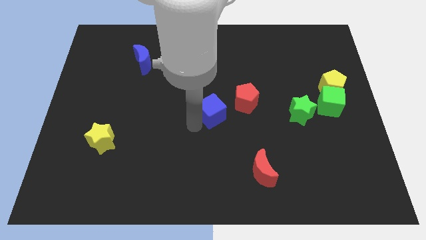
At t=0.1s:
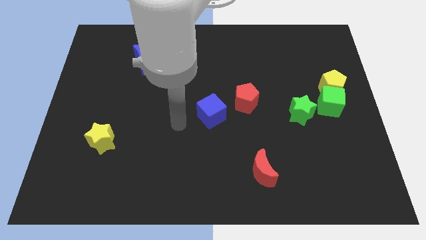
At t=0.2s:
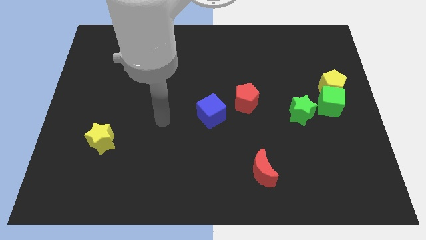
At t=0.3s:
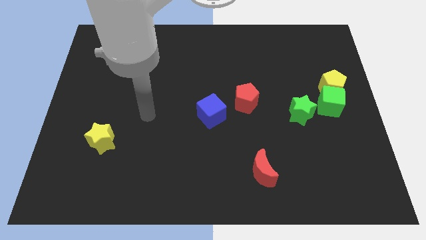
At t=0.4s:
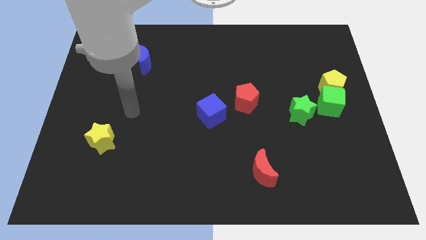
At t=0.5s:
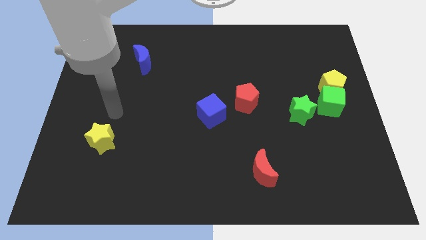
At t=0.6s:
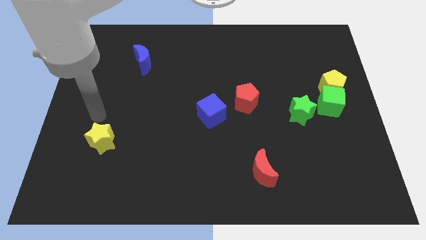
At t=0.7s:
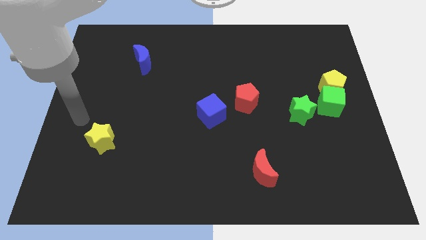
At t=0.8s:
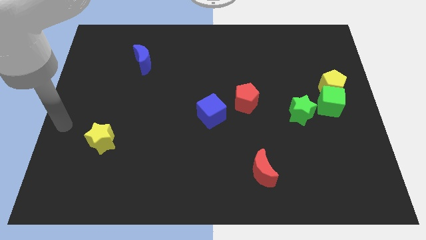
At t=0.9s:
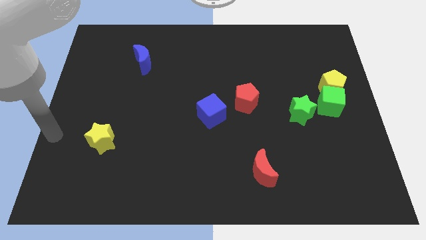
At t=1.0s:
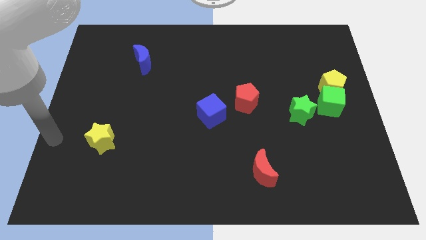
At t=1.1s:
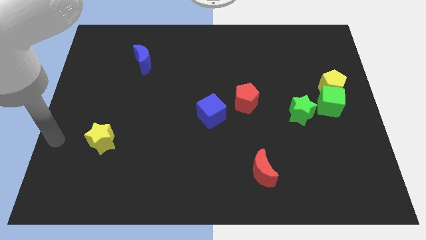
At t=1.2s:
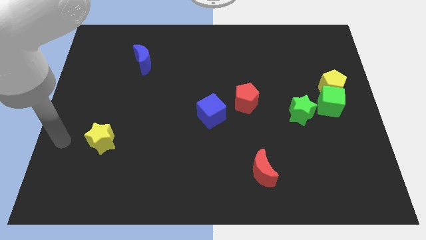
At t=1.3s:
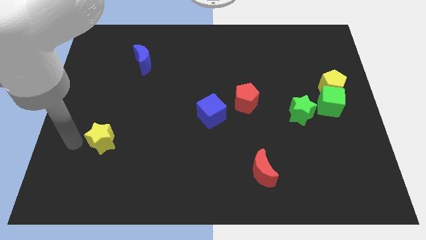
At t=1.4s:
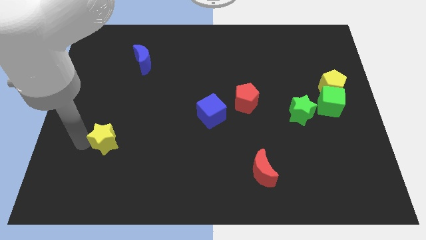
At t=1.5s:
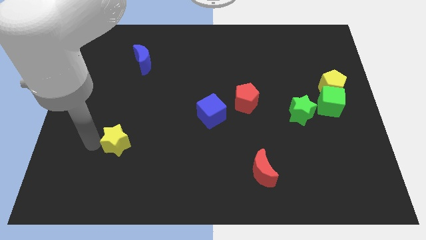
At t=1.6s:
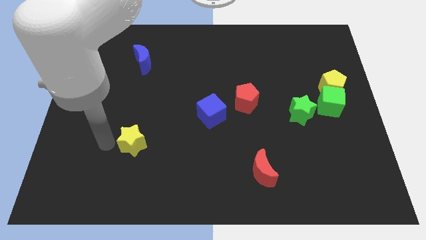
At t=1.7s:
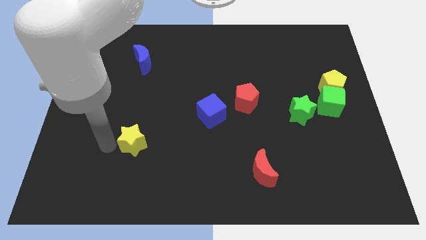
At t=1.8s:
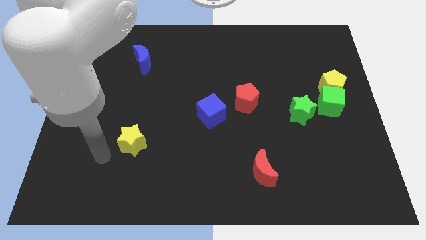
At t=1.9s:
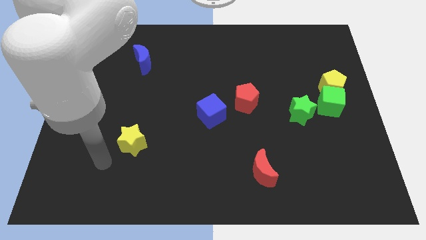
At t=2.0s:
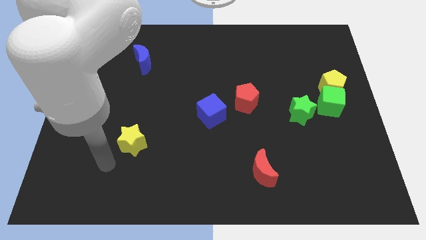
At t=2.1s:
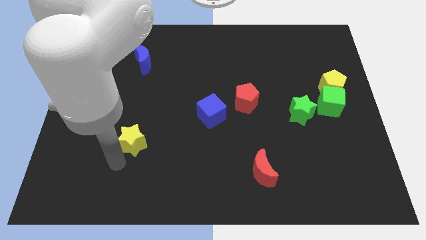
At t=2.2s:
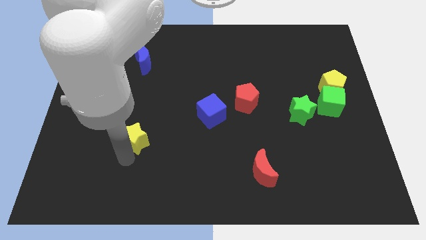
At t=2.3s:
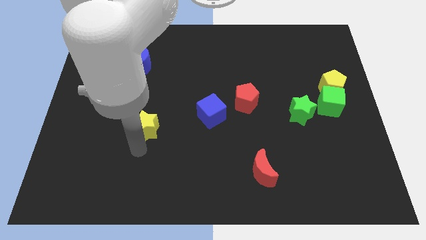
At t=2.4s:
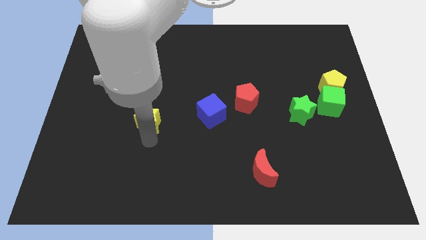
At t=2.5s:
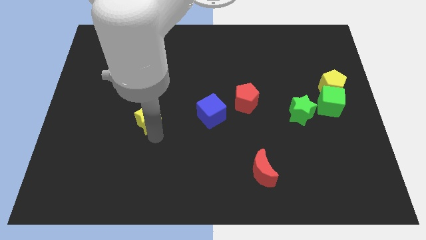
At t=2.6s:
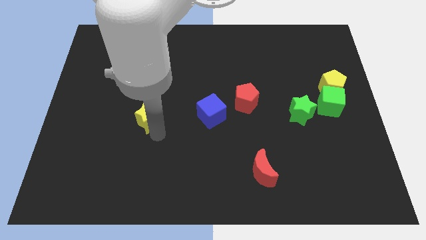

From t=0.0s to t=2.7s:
place the yellow star left to the blue cube

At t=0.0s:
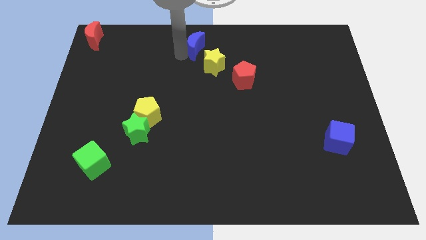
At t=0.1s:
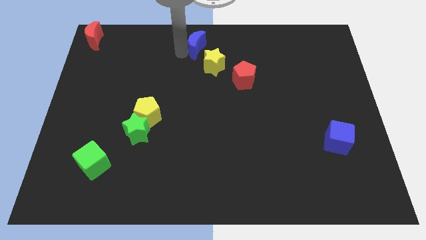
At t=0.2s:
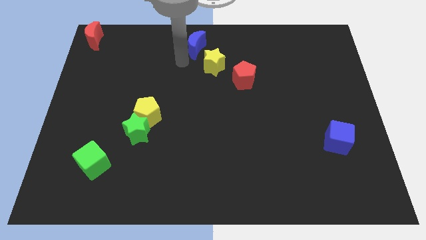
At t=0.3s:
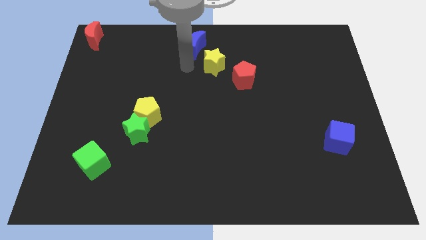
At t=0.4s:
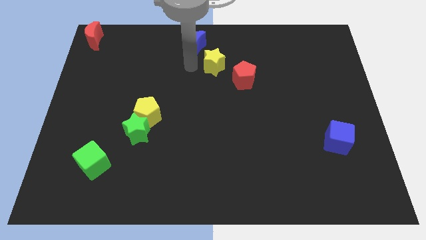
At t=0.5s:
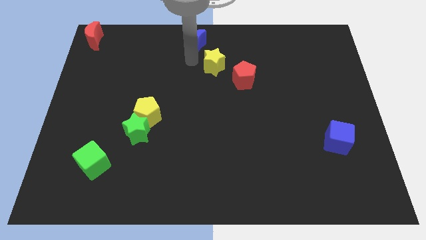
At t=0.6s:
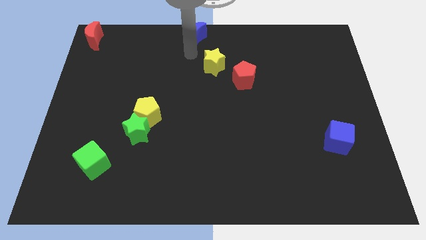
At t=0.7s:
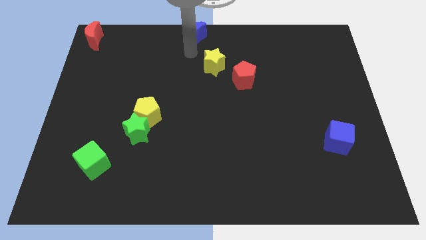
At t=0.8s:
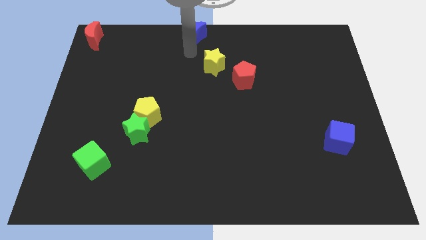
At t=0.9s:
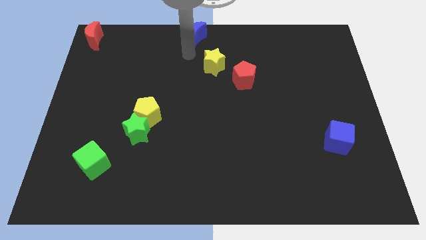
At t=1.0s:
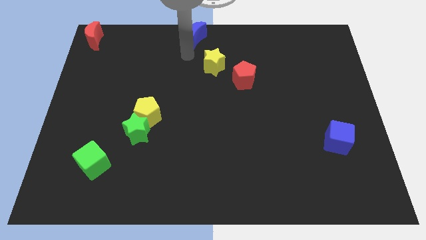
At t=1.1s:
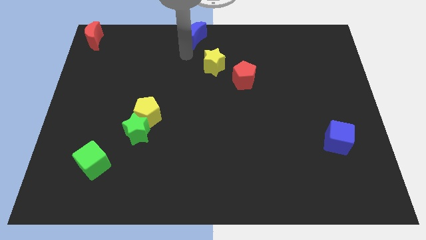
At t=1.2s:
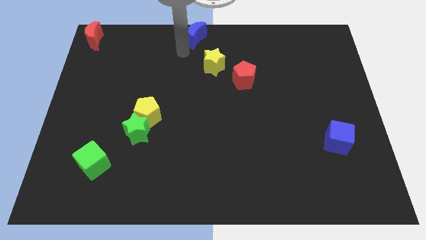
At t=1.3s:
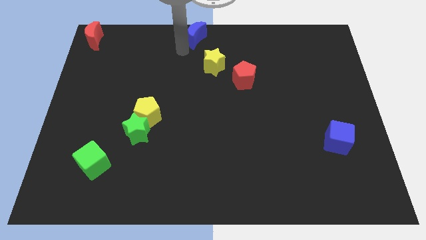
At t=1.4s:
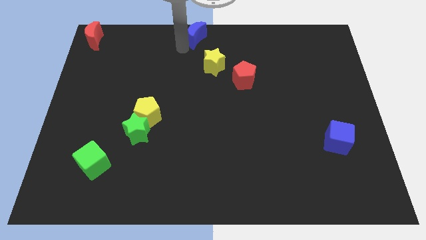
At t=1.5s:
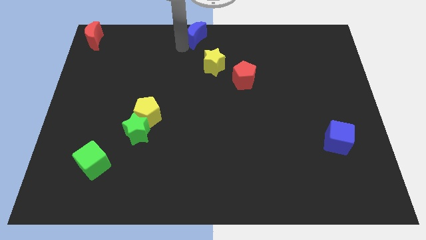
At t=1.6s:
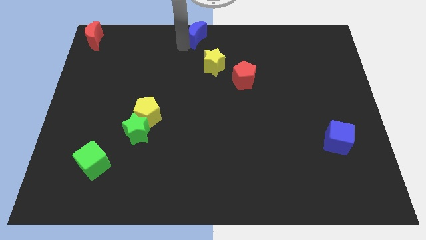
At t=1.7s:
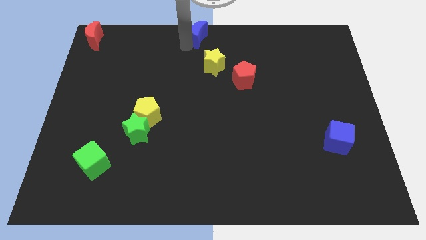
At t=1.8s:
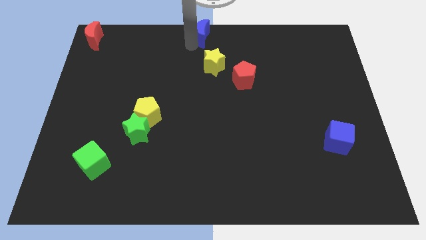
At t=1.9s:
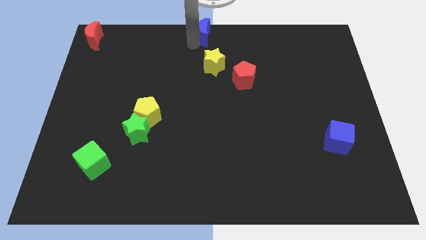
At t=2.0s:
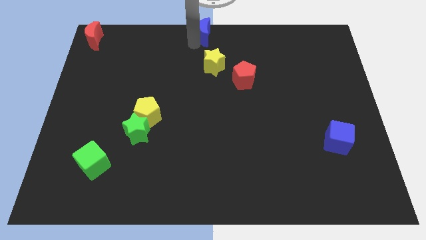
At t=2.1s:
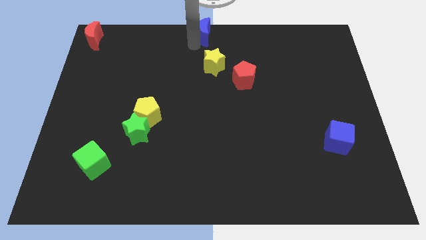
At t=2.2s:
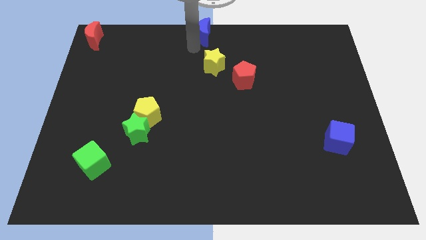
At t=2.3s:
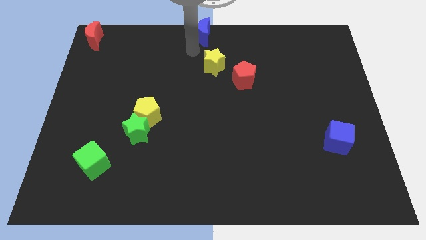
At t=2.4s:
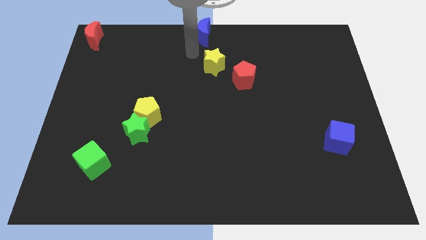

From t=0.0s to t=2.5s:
move the blue crescent to the top center of the board

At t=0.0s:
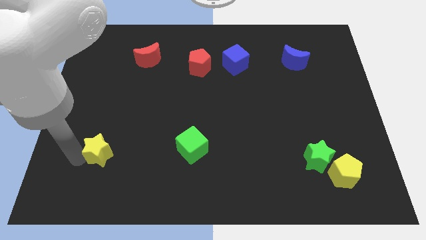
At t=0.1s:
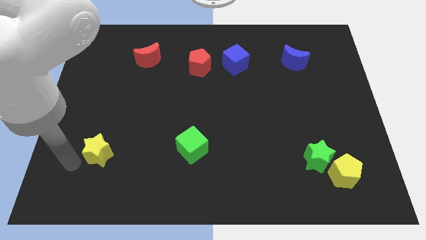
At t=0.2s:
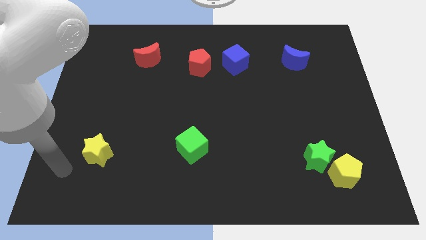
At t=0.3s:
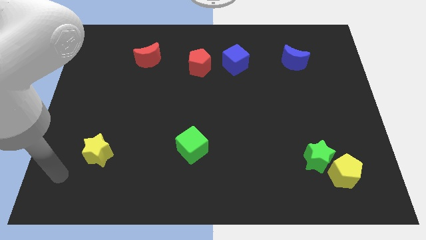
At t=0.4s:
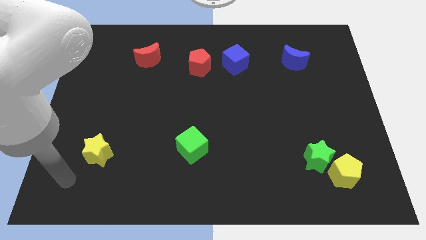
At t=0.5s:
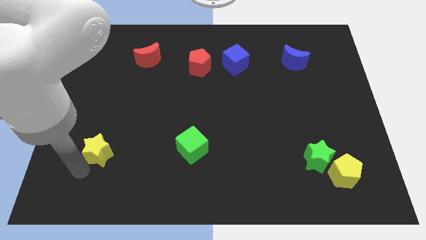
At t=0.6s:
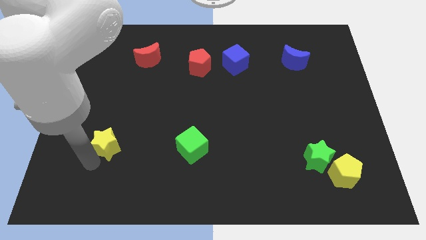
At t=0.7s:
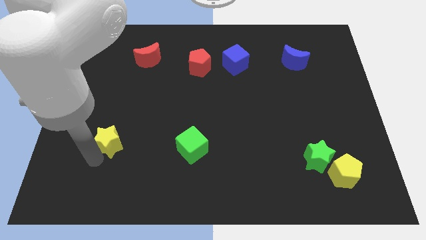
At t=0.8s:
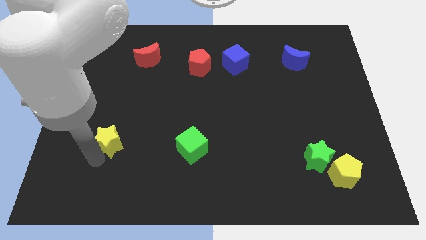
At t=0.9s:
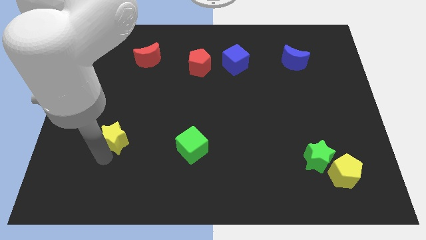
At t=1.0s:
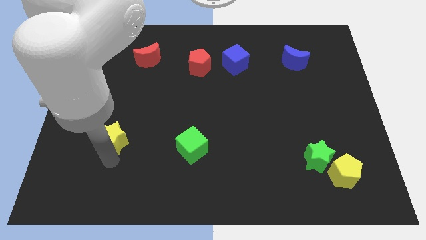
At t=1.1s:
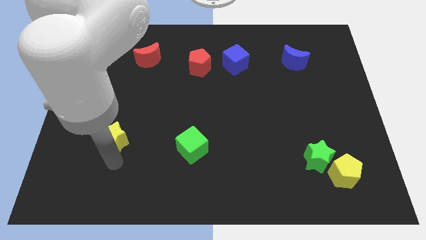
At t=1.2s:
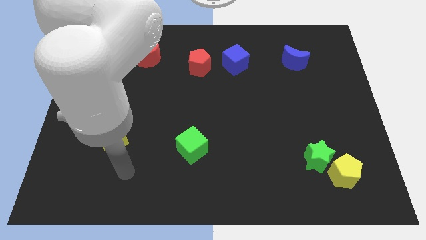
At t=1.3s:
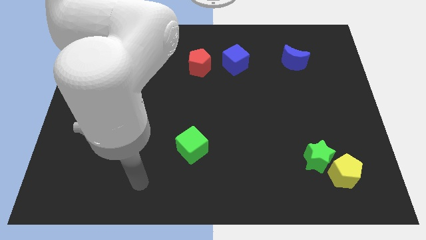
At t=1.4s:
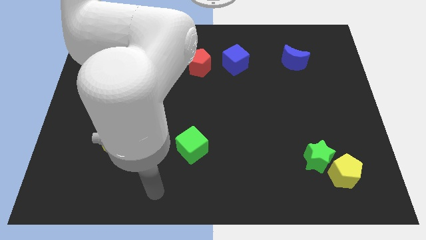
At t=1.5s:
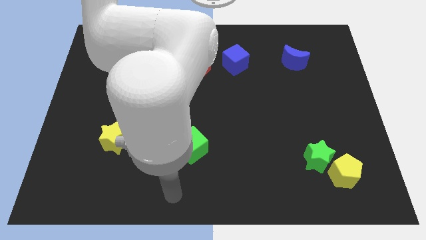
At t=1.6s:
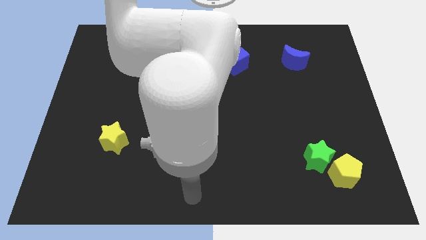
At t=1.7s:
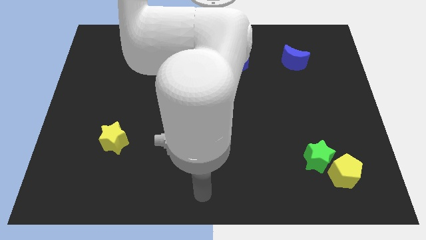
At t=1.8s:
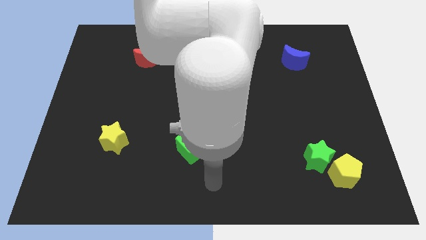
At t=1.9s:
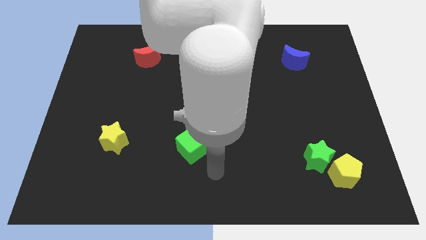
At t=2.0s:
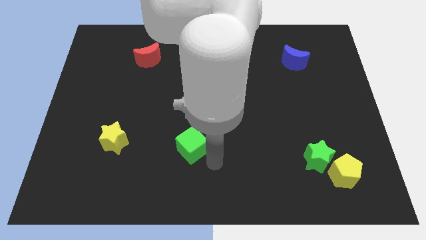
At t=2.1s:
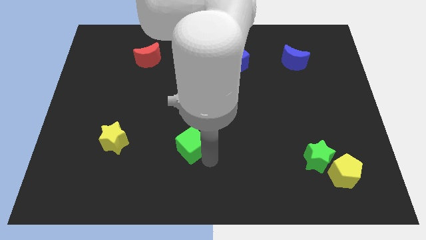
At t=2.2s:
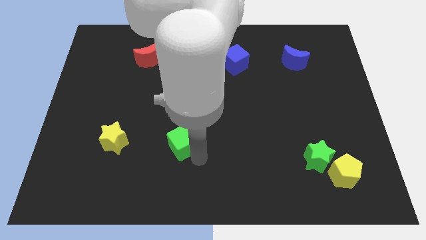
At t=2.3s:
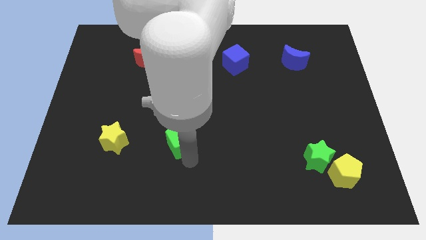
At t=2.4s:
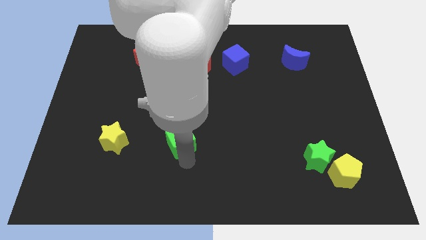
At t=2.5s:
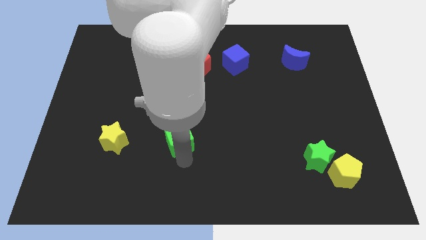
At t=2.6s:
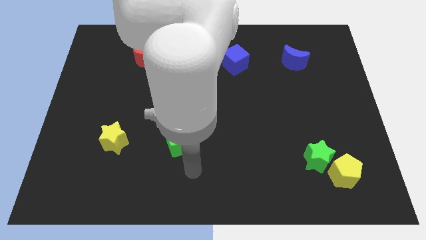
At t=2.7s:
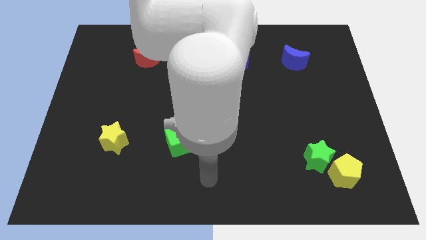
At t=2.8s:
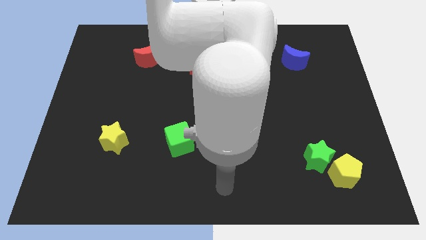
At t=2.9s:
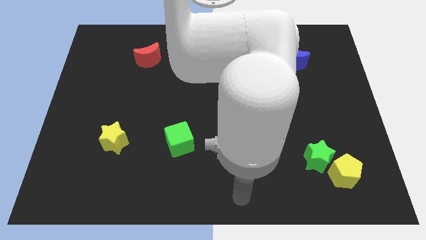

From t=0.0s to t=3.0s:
place the green cube to the right of the yellow star

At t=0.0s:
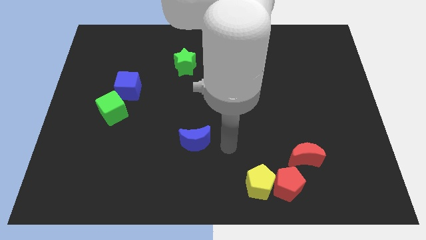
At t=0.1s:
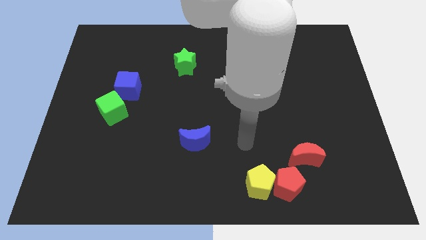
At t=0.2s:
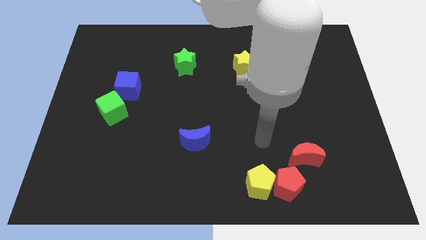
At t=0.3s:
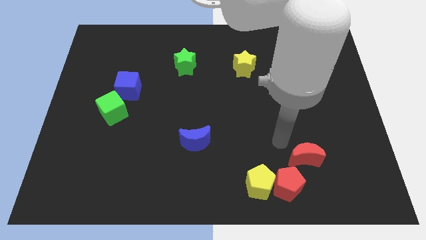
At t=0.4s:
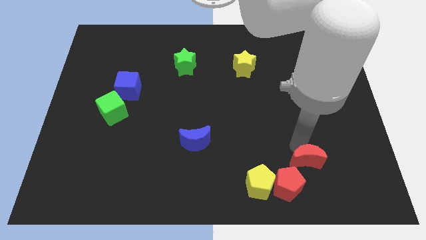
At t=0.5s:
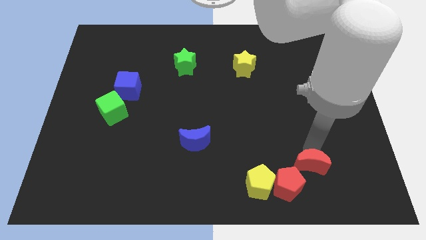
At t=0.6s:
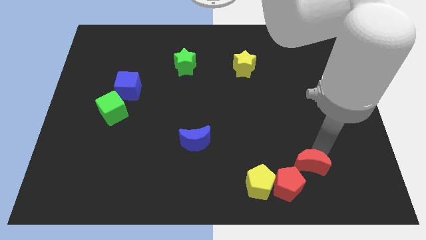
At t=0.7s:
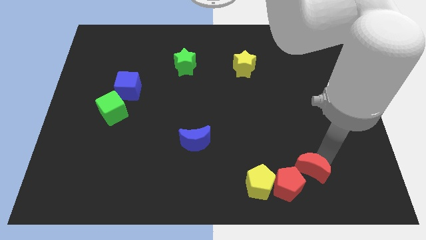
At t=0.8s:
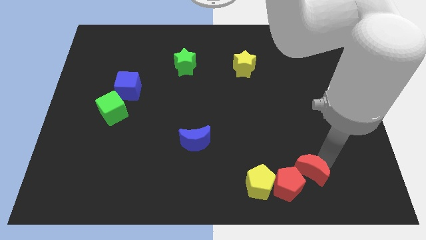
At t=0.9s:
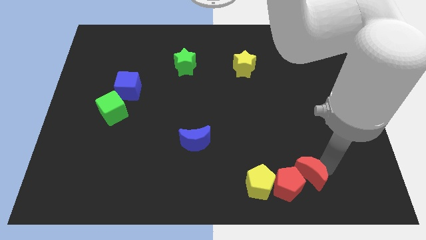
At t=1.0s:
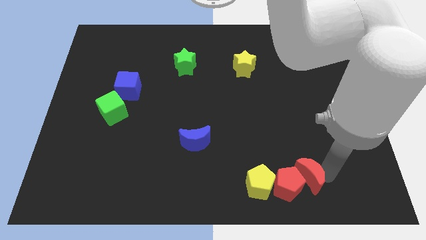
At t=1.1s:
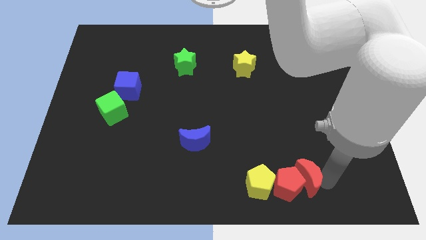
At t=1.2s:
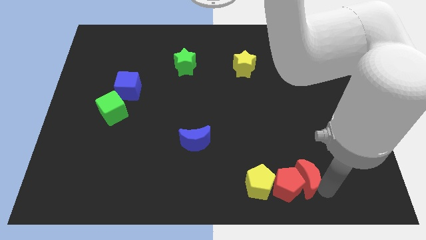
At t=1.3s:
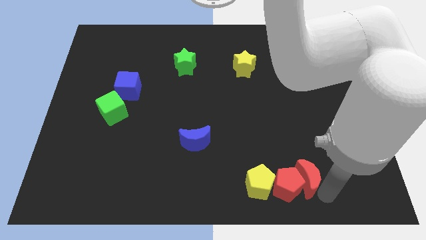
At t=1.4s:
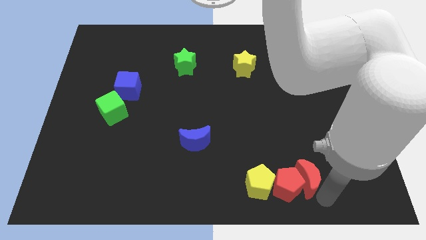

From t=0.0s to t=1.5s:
push the red crescent into red pentagon
